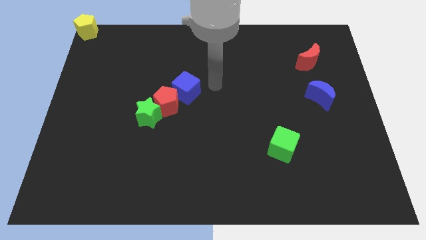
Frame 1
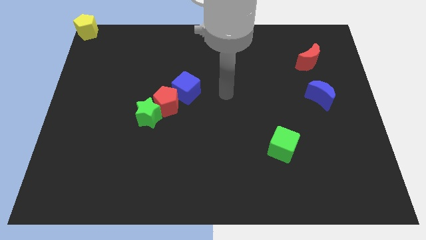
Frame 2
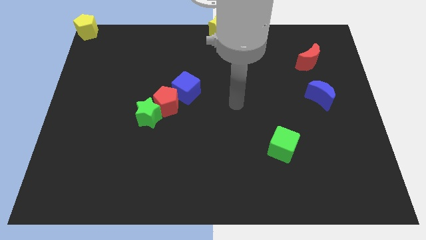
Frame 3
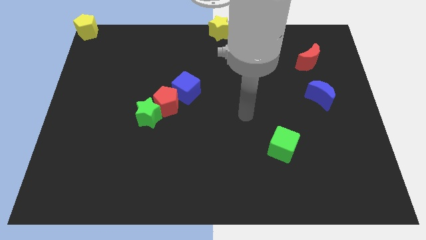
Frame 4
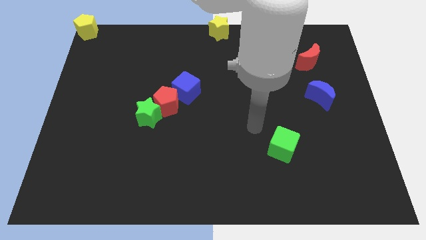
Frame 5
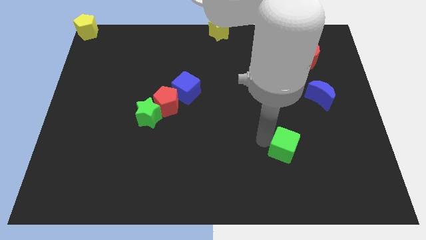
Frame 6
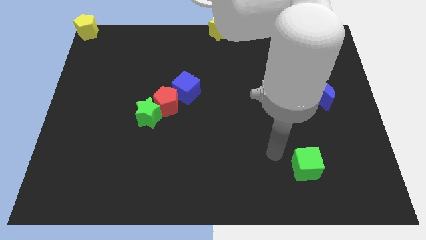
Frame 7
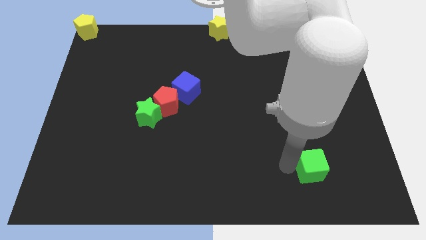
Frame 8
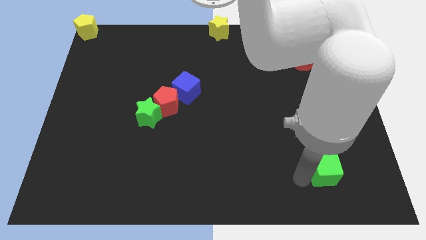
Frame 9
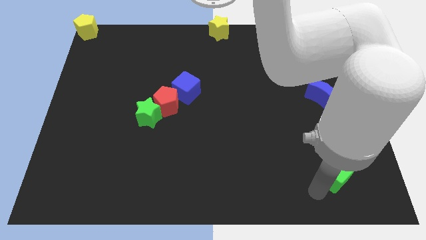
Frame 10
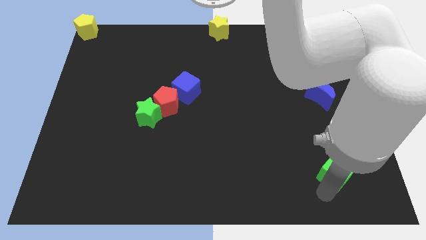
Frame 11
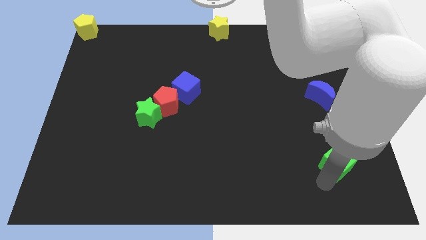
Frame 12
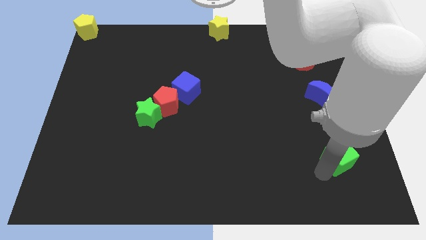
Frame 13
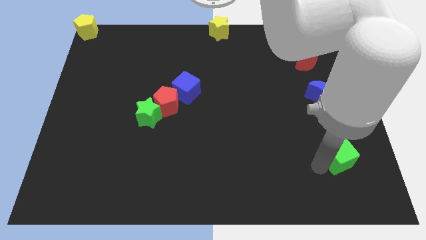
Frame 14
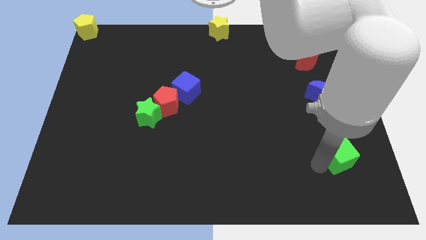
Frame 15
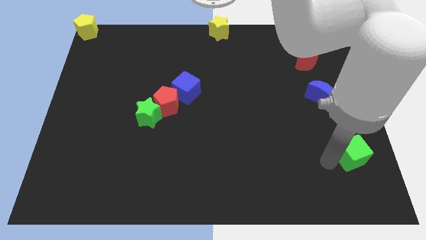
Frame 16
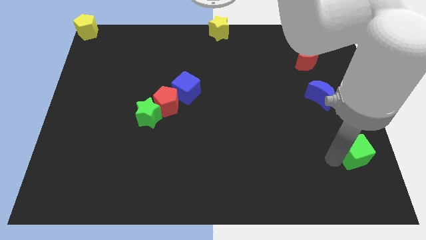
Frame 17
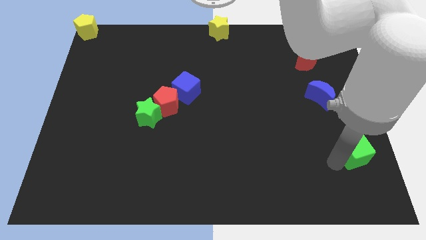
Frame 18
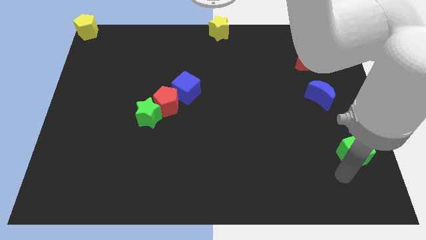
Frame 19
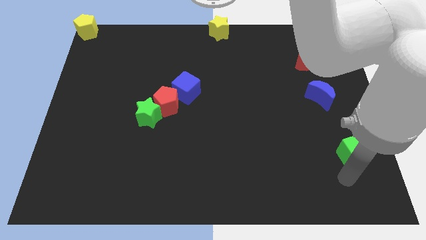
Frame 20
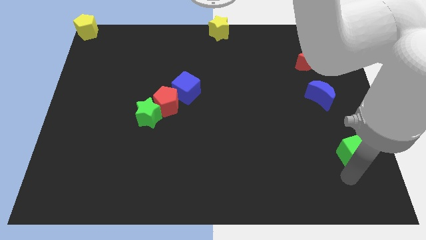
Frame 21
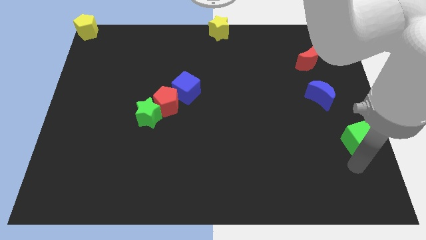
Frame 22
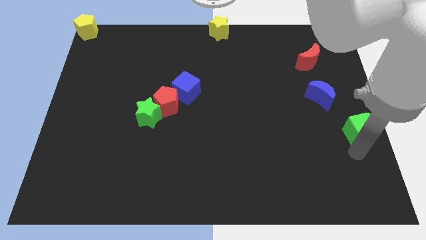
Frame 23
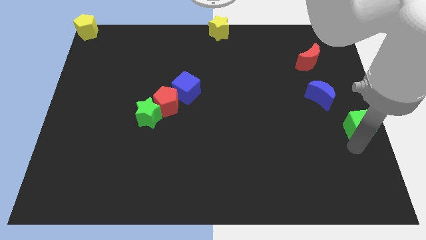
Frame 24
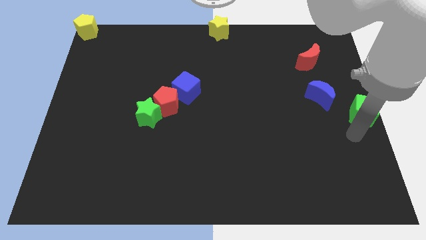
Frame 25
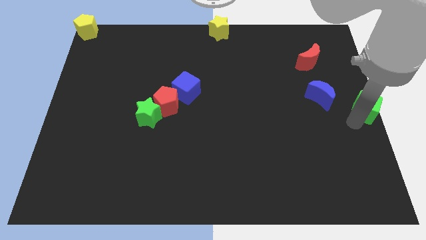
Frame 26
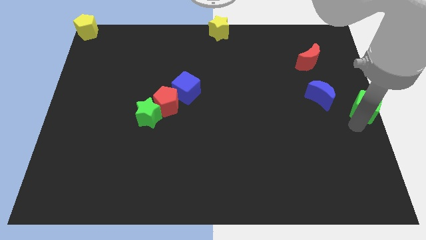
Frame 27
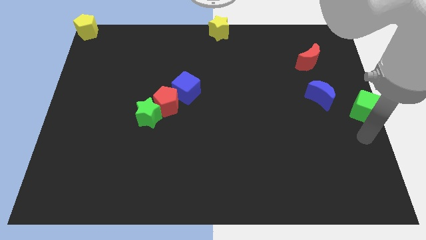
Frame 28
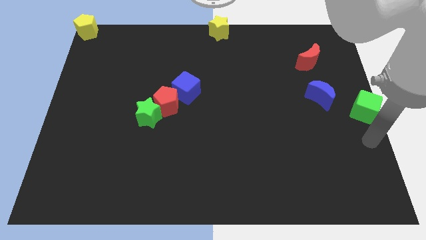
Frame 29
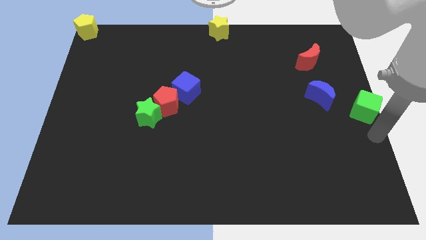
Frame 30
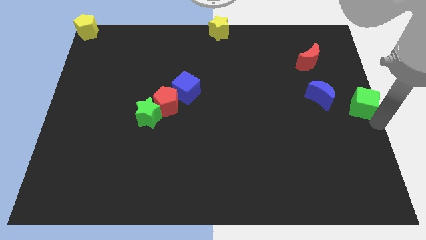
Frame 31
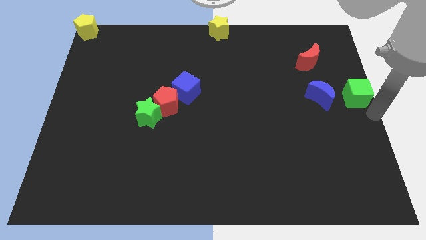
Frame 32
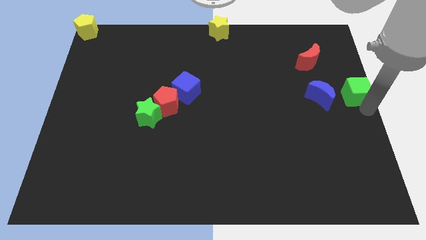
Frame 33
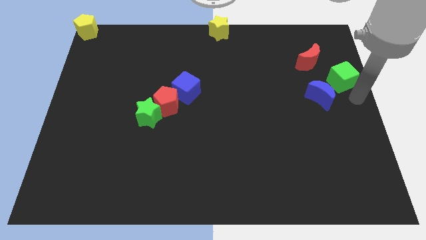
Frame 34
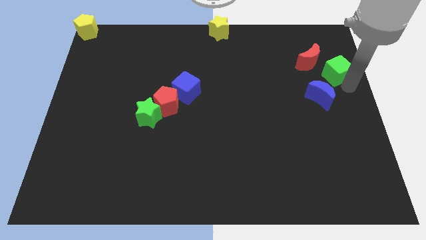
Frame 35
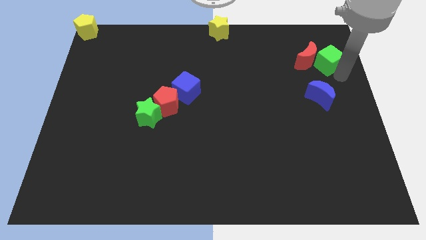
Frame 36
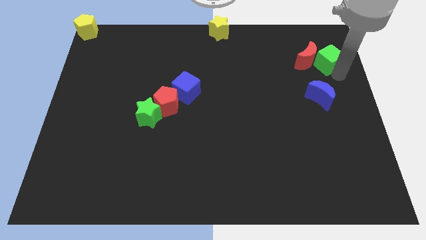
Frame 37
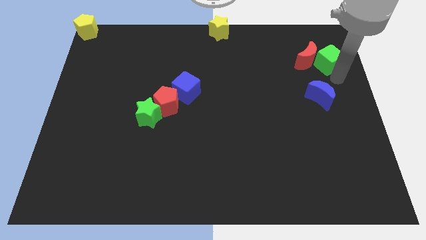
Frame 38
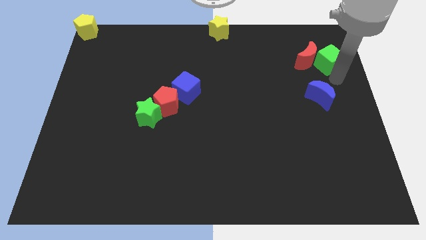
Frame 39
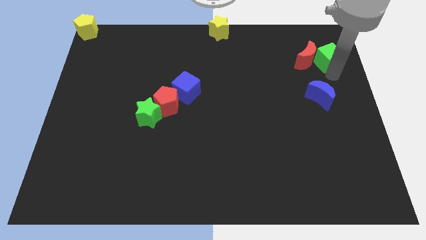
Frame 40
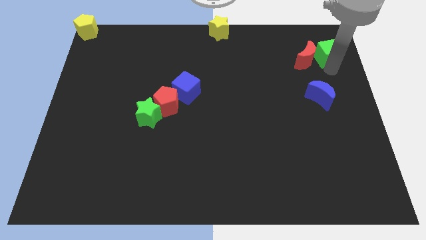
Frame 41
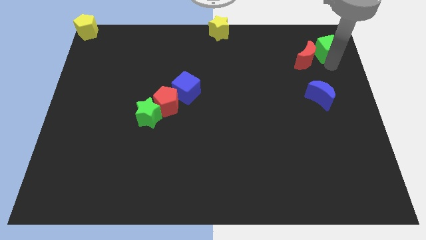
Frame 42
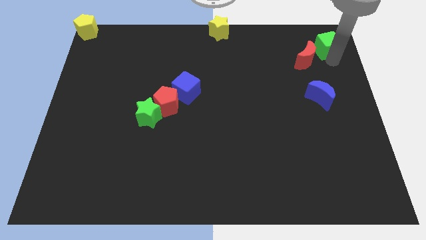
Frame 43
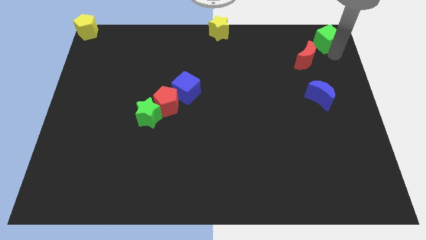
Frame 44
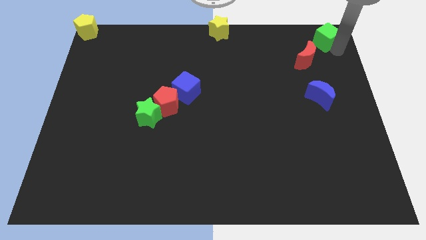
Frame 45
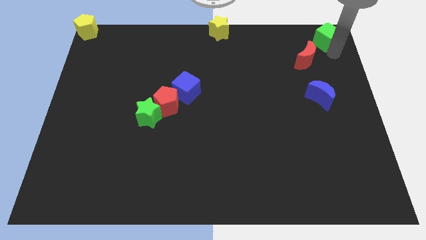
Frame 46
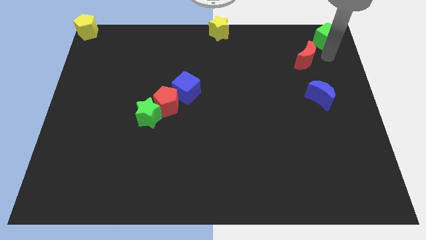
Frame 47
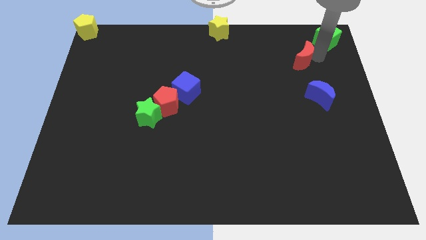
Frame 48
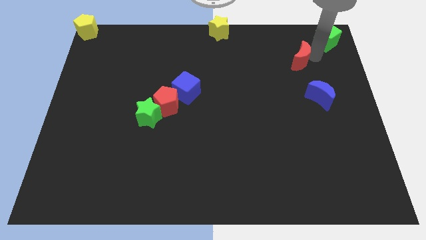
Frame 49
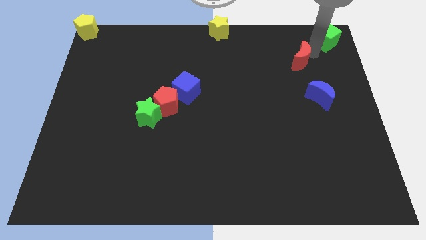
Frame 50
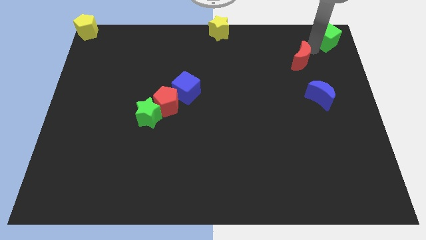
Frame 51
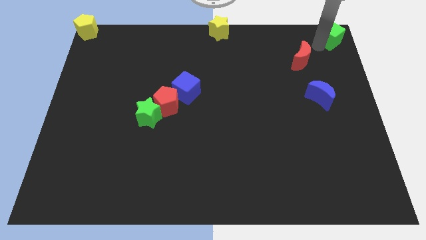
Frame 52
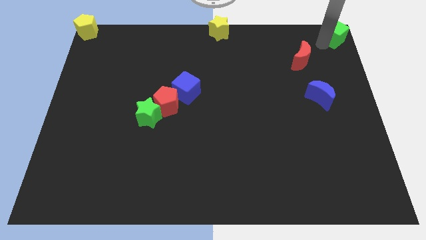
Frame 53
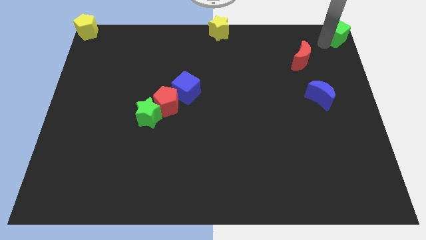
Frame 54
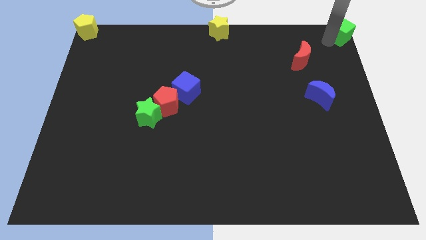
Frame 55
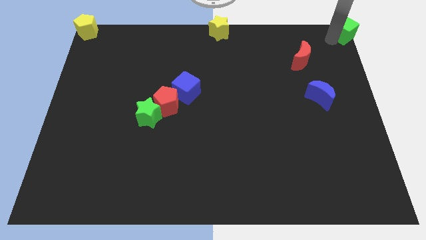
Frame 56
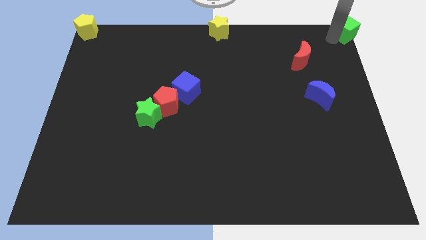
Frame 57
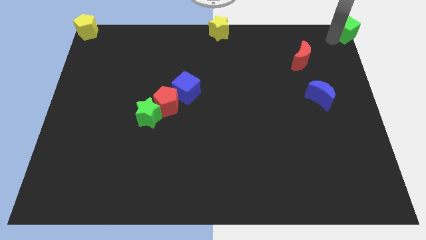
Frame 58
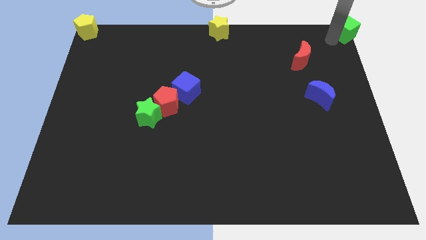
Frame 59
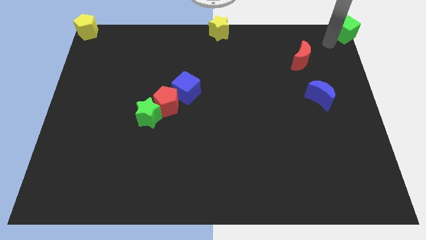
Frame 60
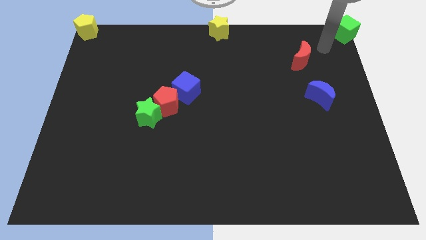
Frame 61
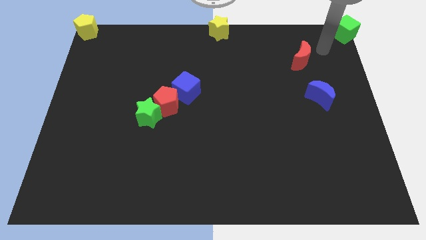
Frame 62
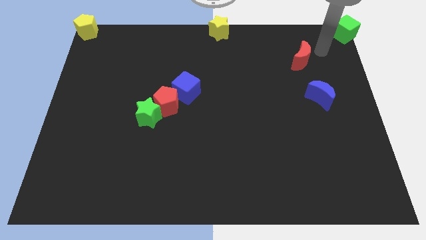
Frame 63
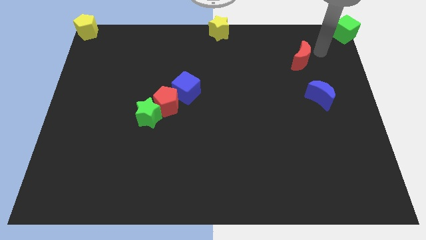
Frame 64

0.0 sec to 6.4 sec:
move the green cube to the top right corner of the board

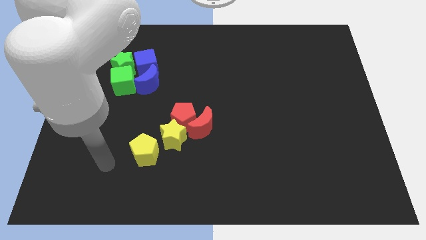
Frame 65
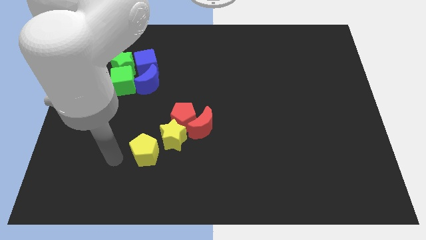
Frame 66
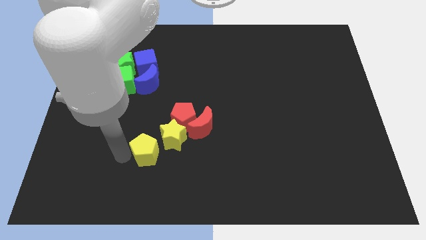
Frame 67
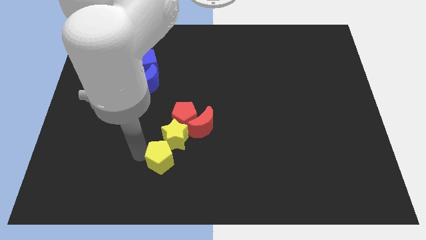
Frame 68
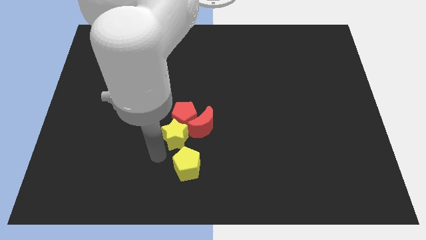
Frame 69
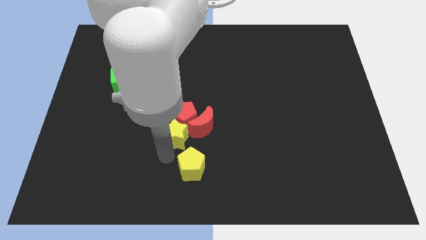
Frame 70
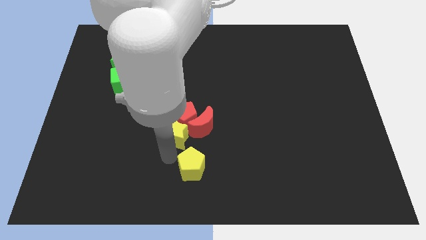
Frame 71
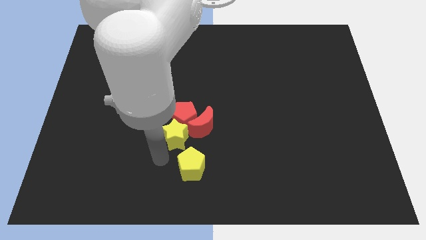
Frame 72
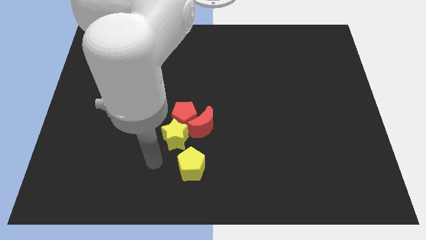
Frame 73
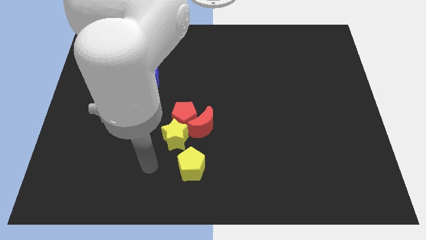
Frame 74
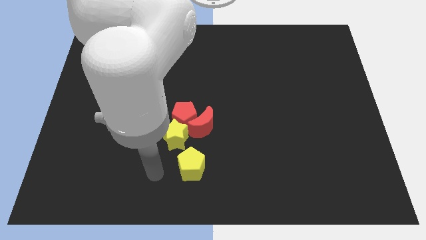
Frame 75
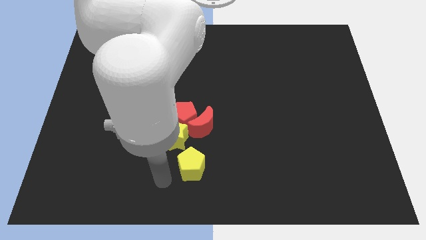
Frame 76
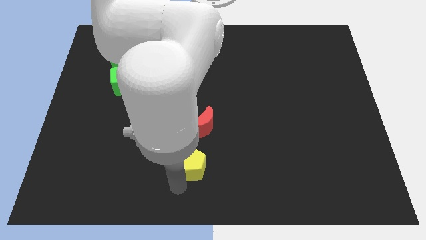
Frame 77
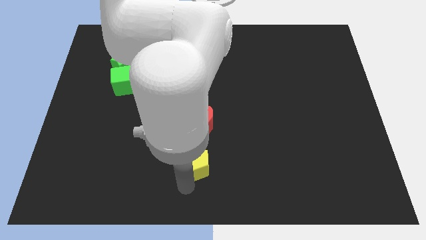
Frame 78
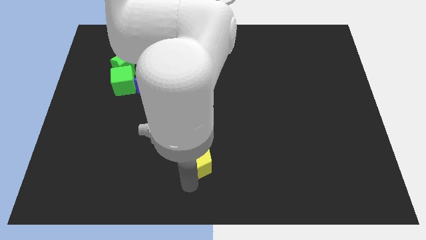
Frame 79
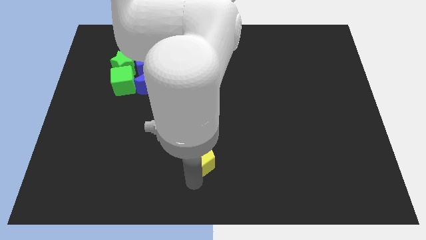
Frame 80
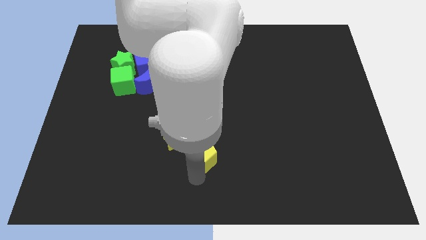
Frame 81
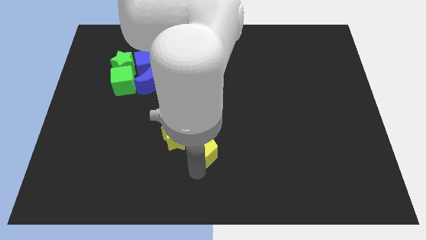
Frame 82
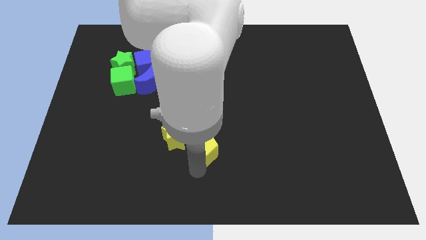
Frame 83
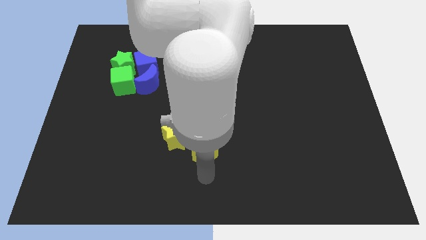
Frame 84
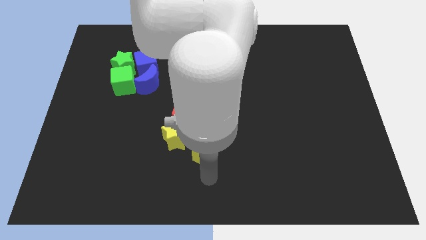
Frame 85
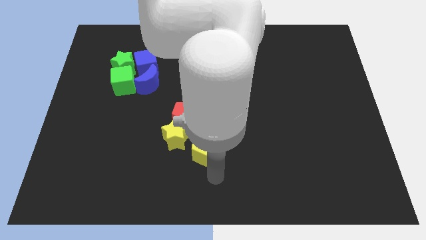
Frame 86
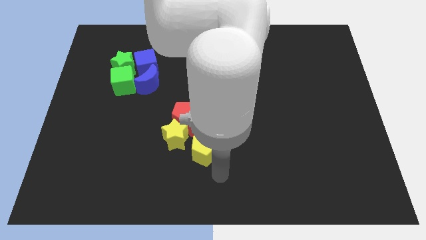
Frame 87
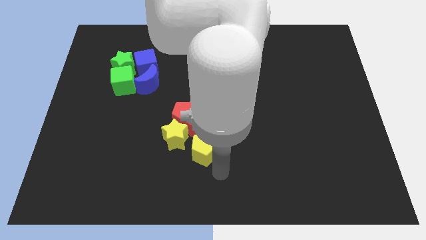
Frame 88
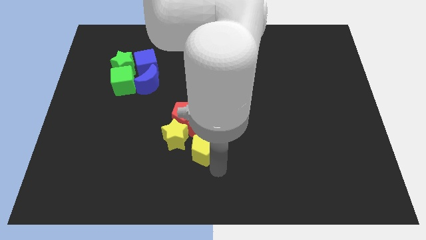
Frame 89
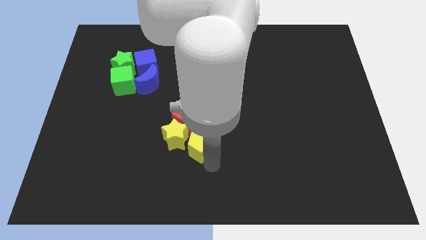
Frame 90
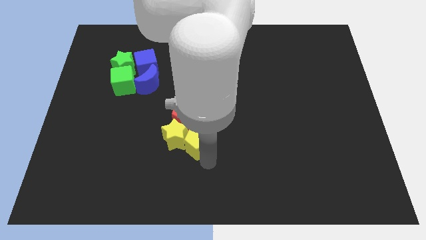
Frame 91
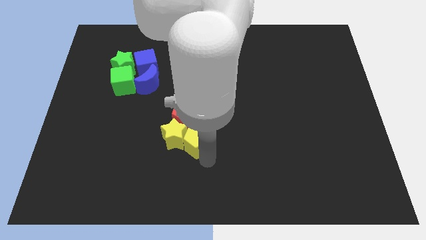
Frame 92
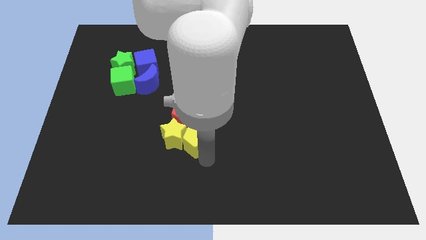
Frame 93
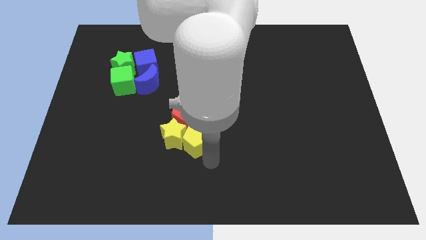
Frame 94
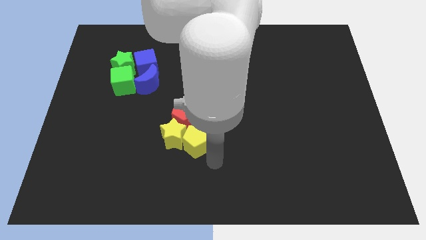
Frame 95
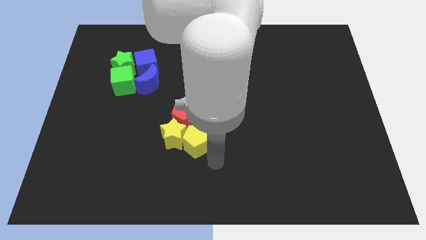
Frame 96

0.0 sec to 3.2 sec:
place the yellow pentagon below red moon
